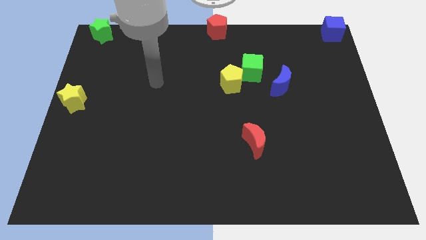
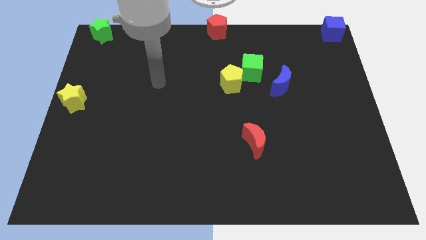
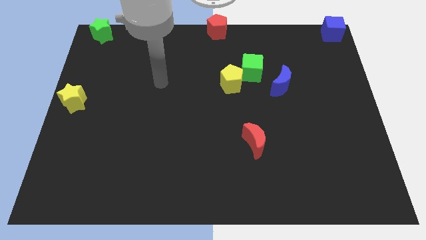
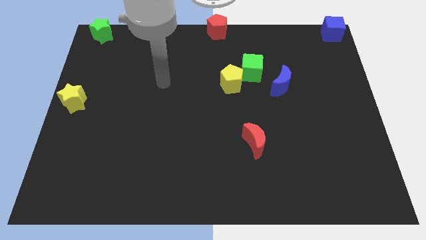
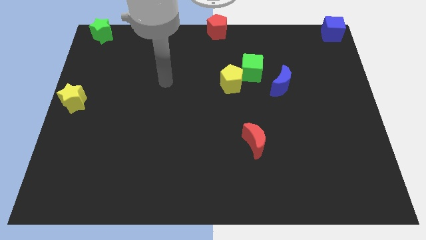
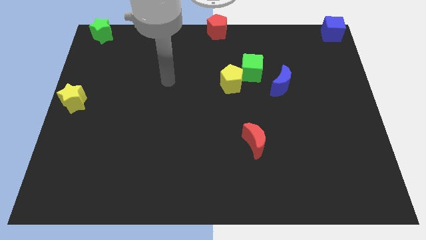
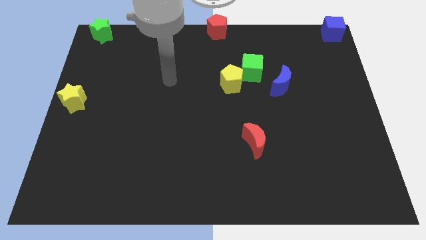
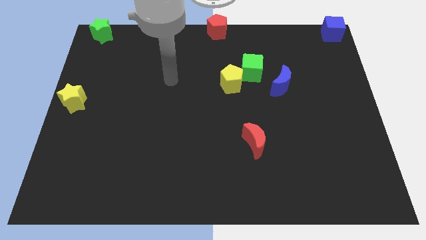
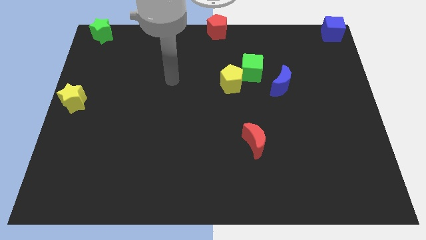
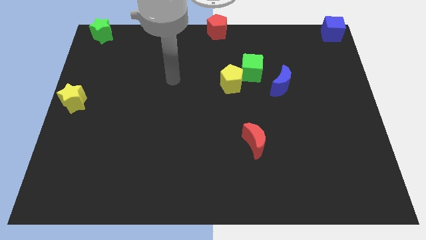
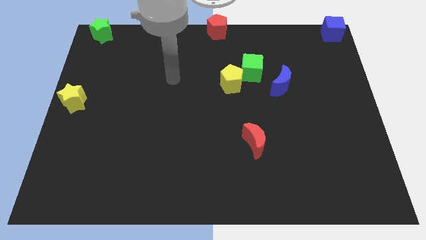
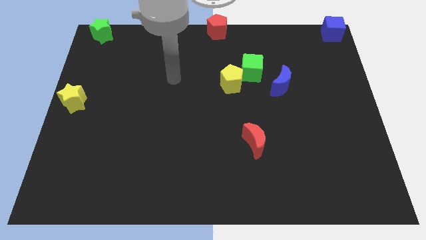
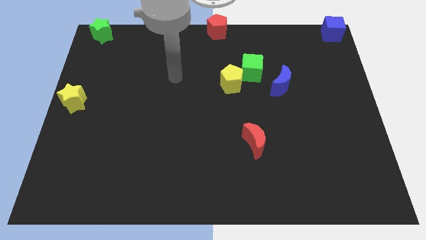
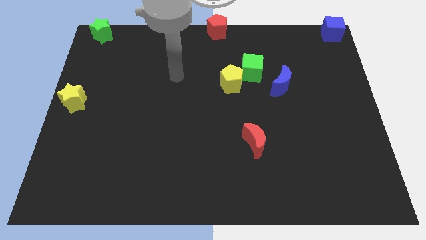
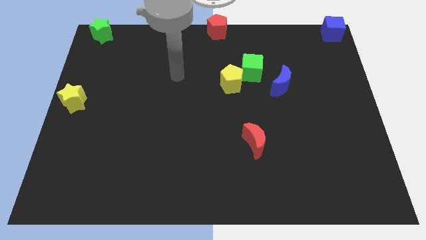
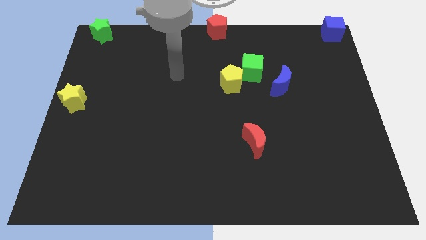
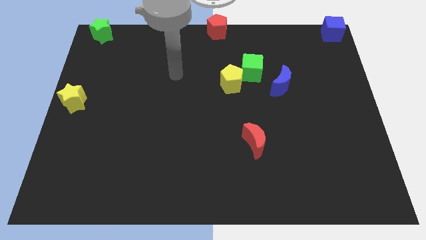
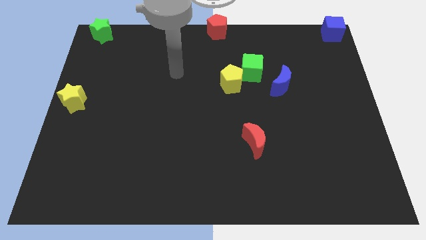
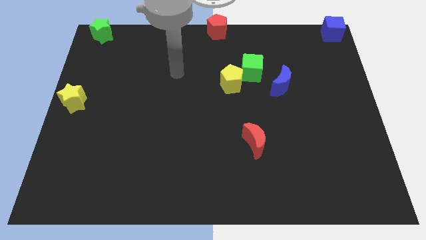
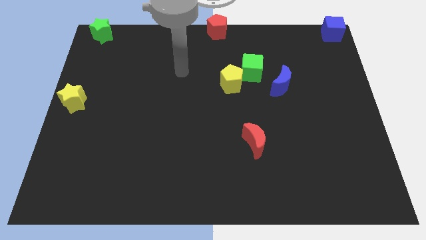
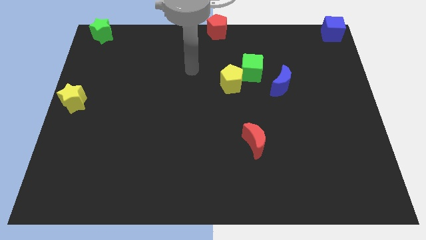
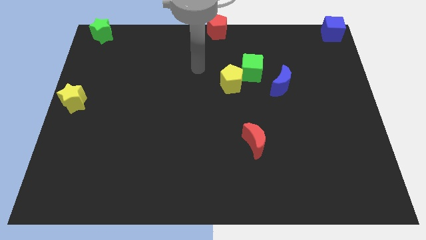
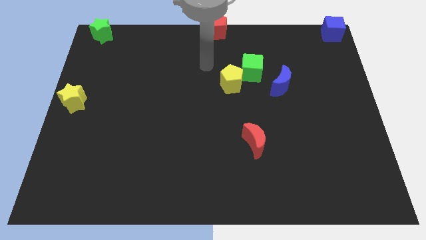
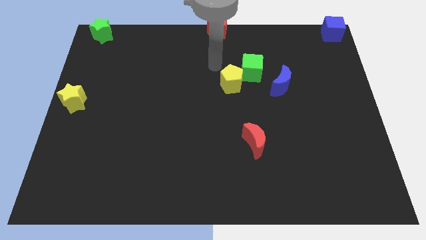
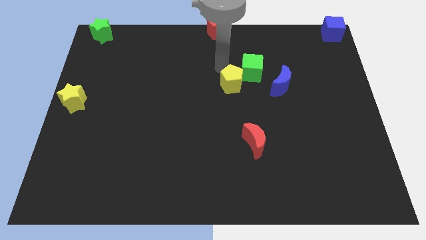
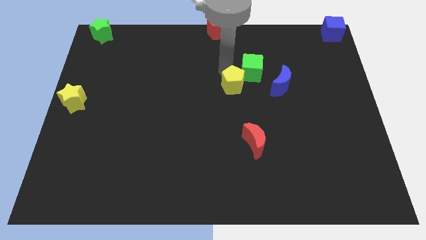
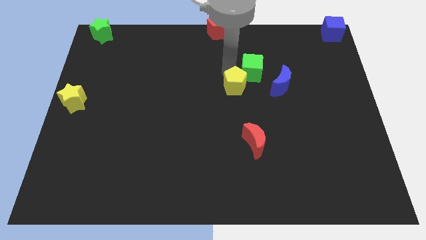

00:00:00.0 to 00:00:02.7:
touch arm to the top of yellow pentagon

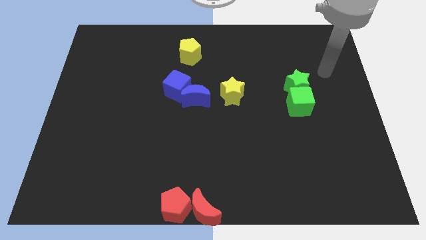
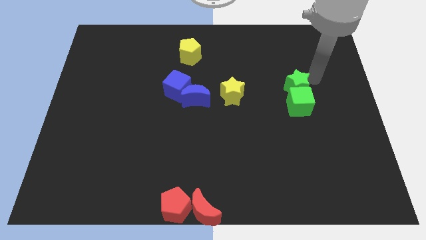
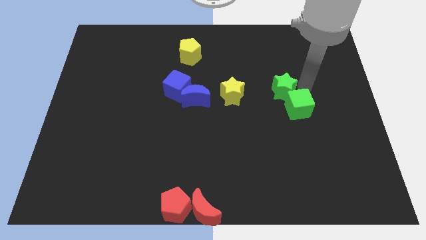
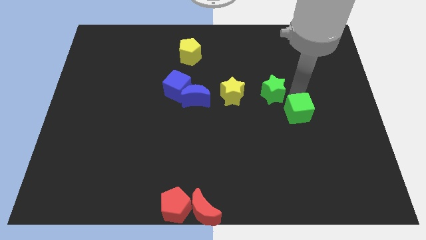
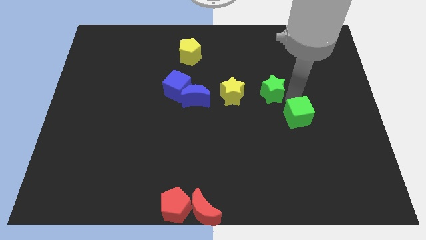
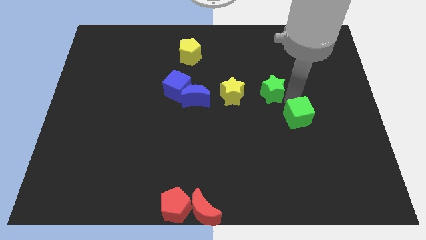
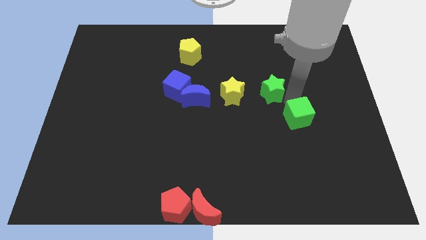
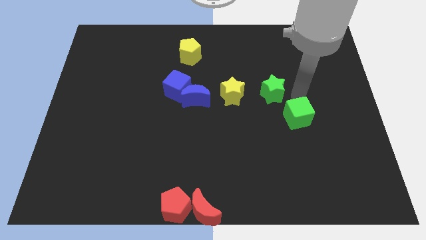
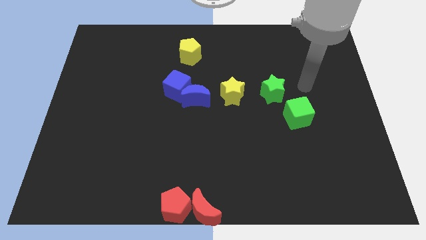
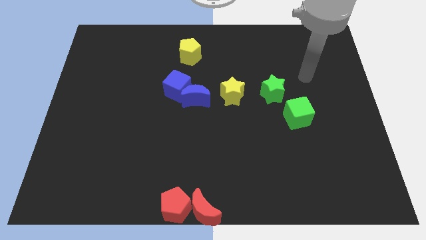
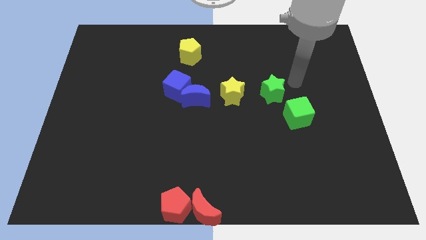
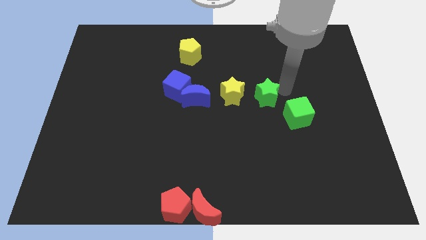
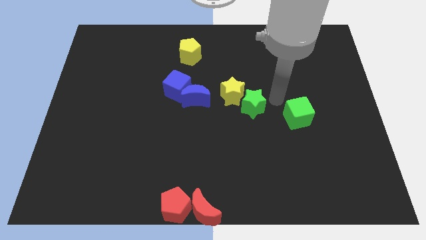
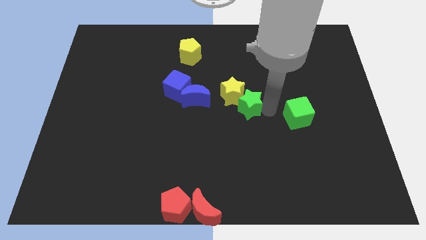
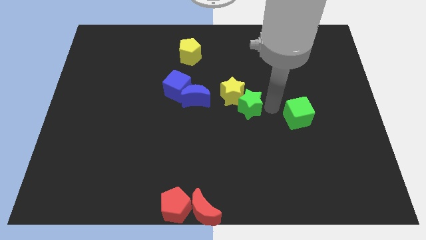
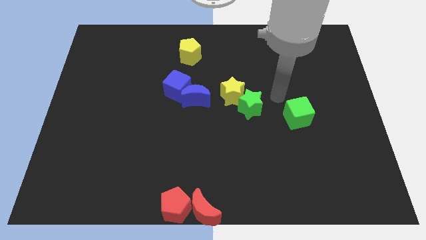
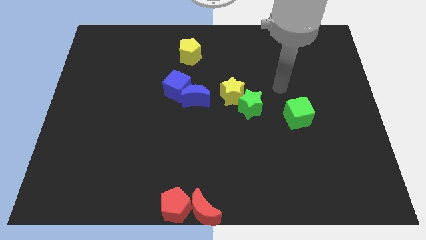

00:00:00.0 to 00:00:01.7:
move the green star close to the yellow star

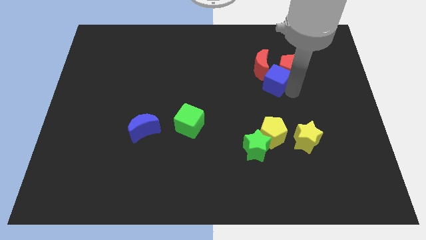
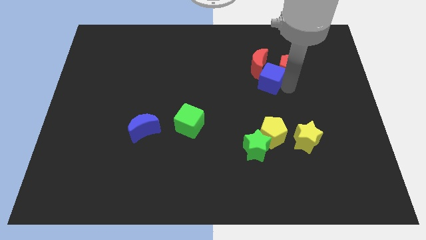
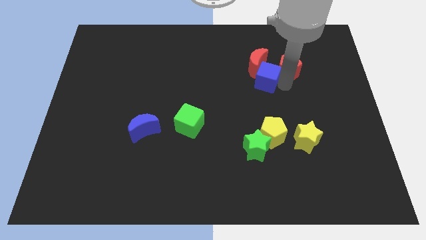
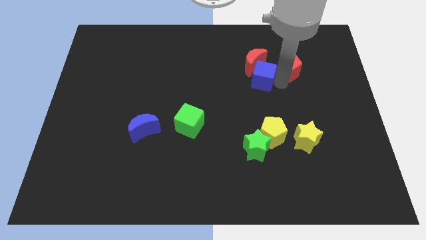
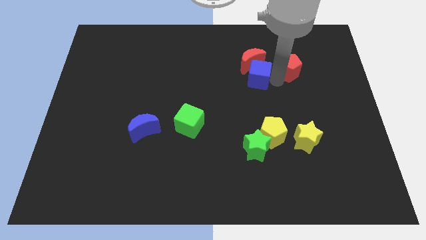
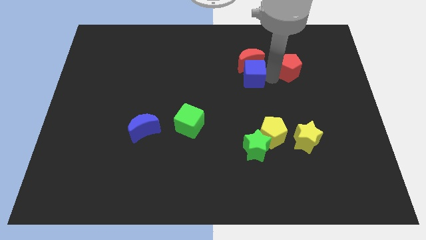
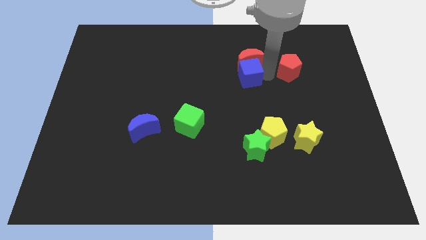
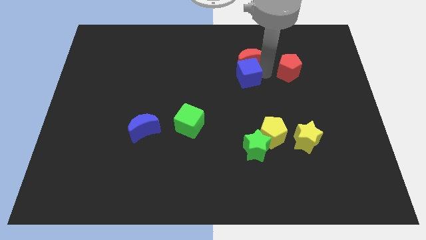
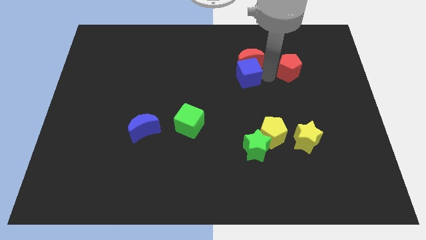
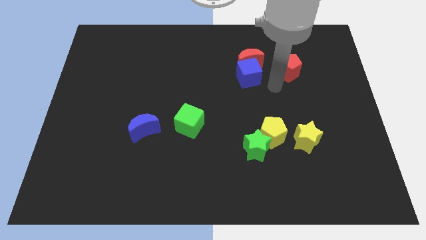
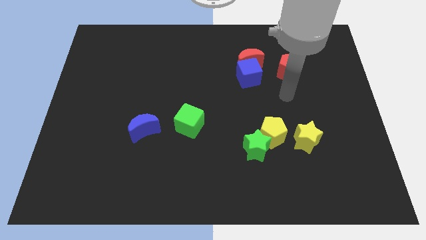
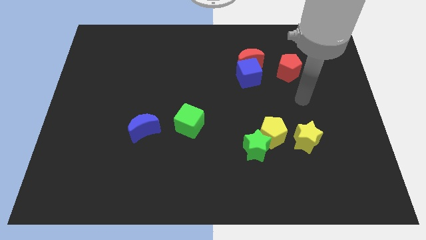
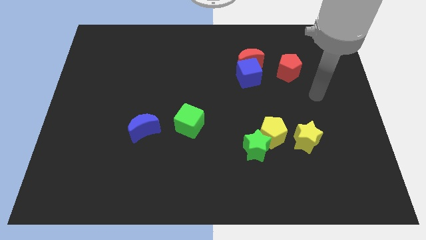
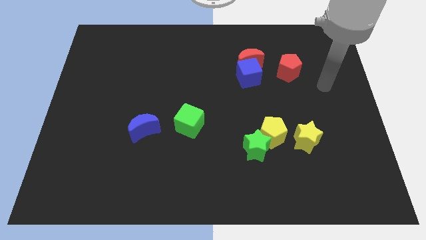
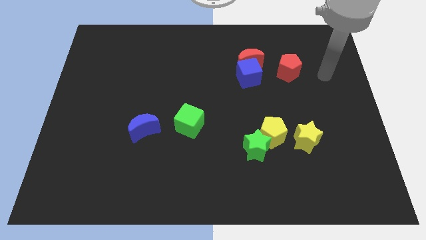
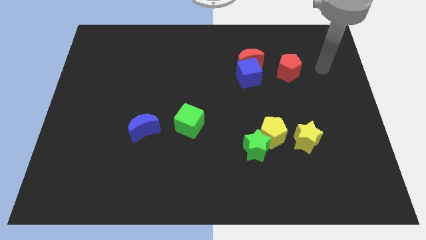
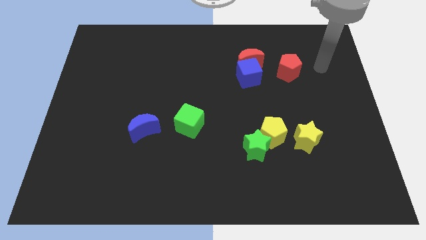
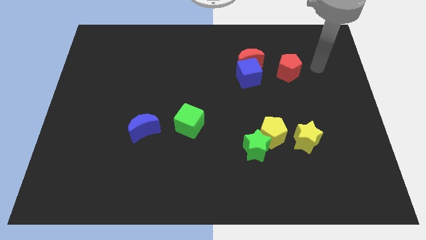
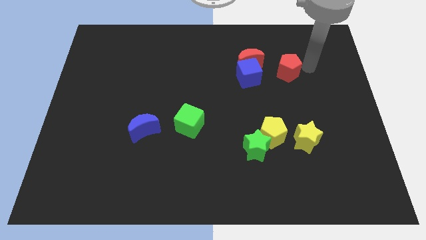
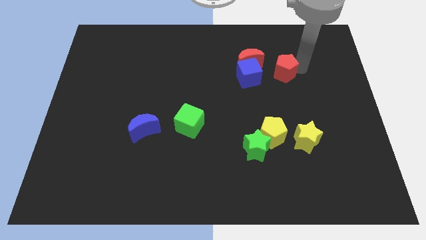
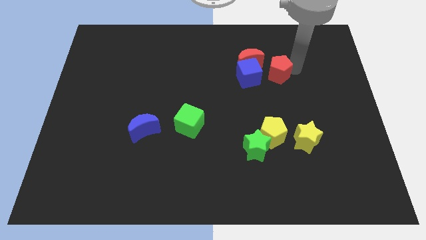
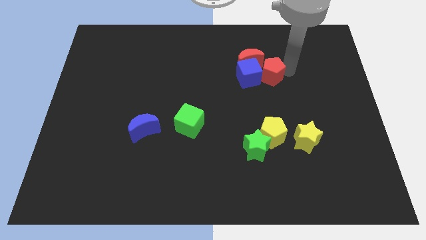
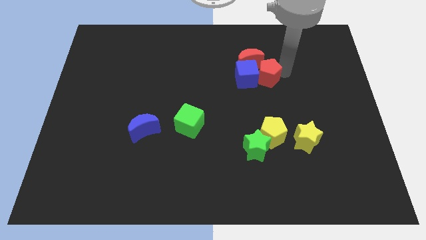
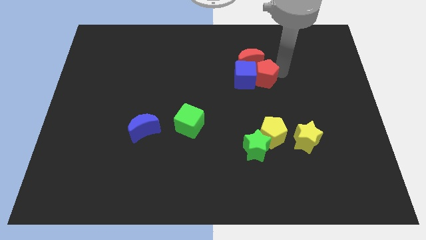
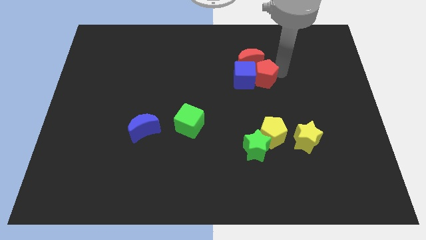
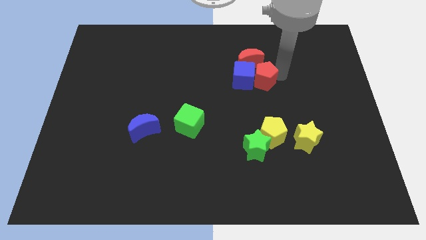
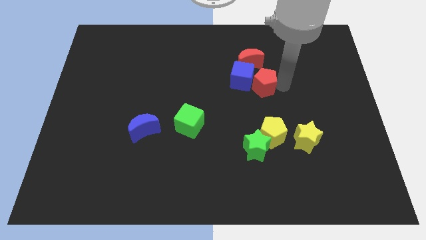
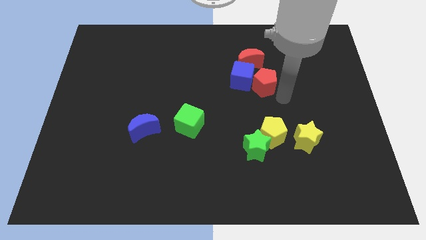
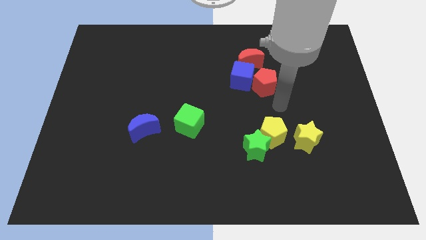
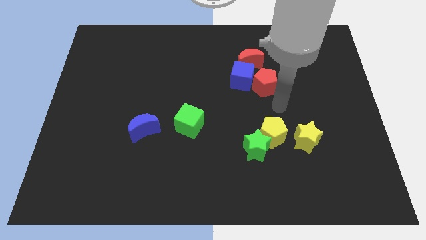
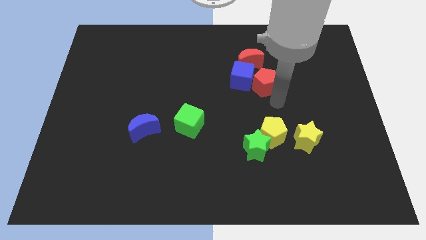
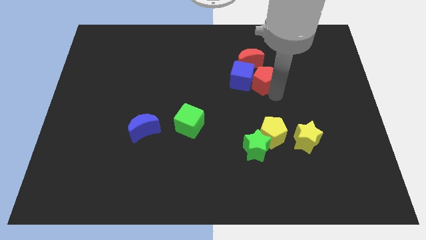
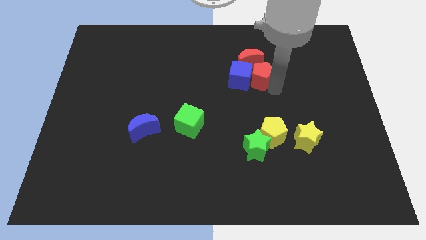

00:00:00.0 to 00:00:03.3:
attach the red pentagon to the blue cube

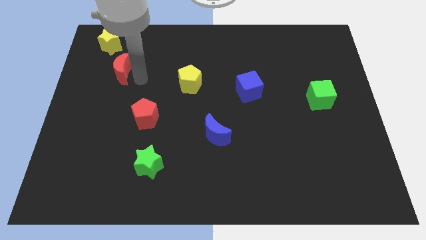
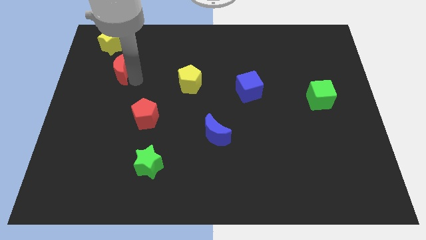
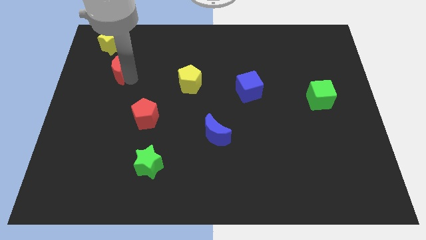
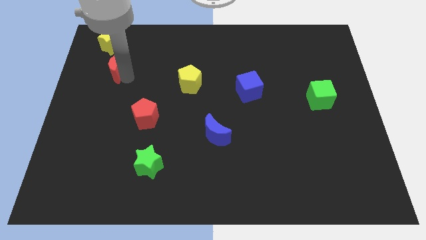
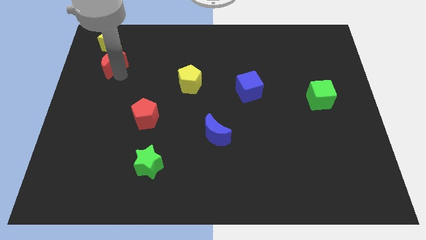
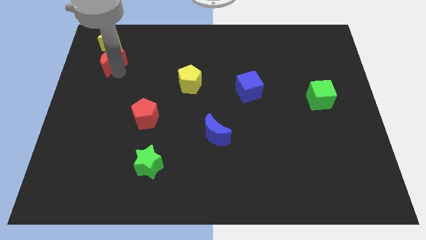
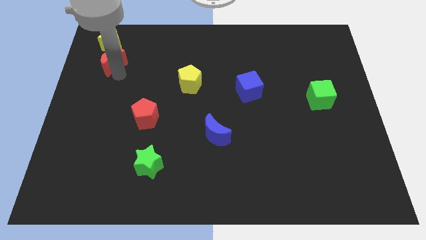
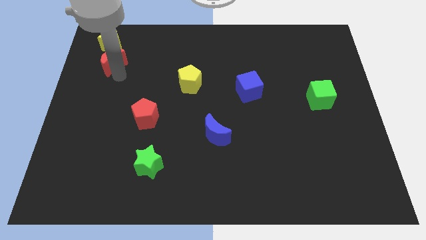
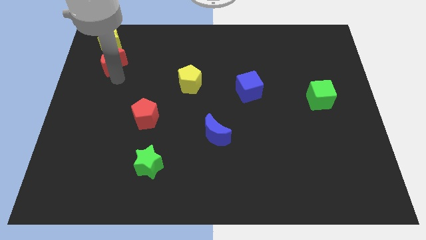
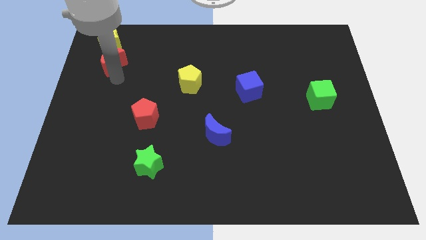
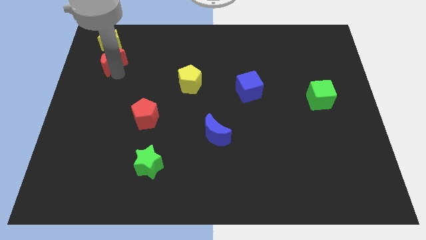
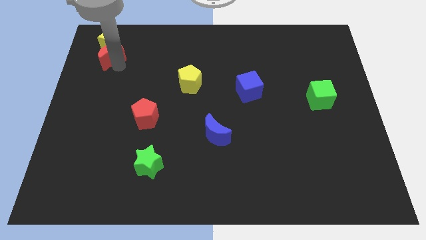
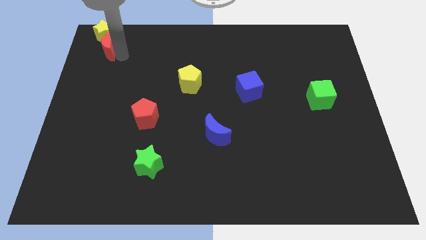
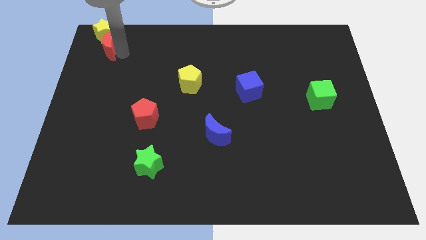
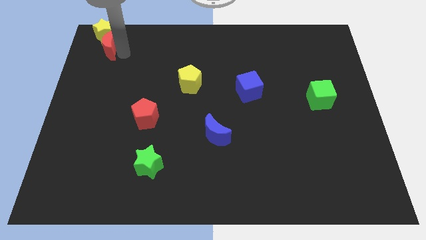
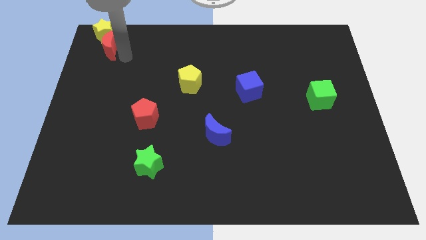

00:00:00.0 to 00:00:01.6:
push the red crescent into the bottom side of the yellow star
